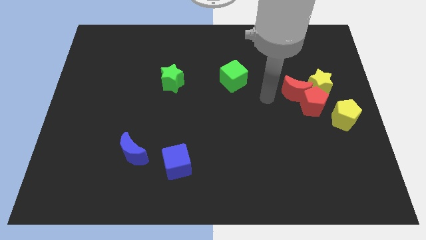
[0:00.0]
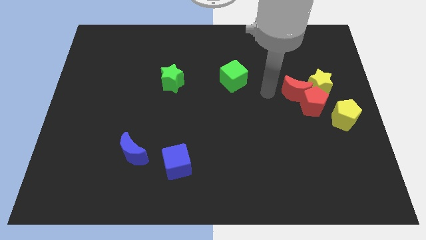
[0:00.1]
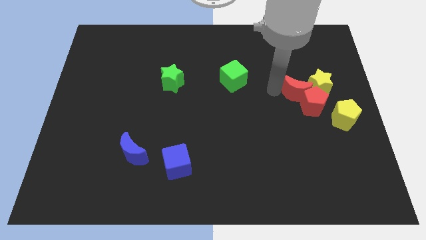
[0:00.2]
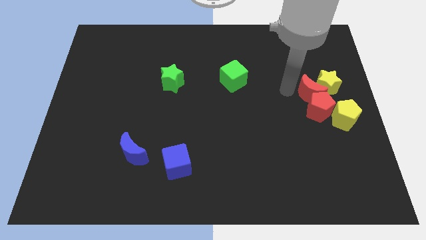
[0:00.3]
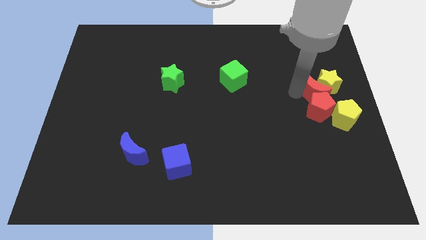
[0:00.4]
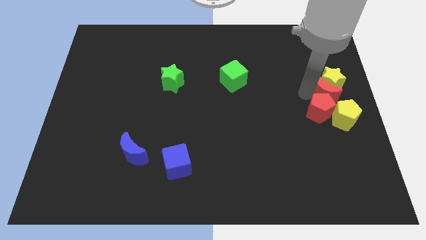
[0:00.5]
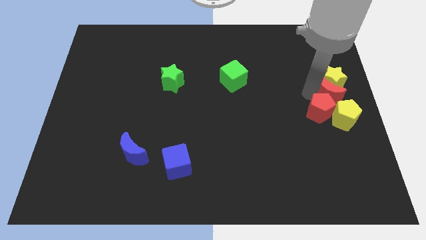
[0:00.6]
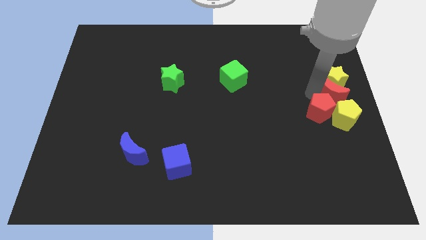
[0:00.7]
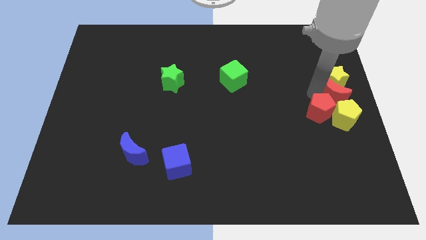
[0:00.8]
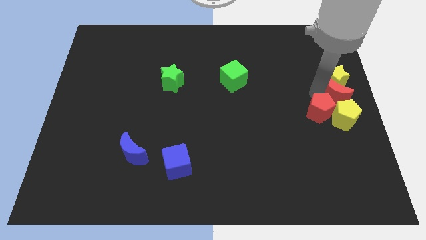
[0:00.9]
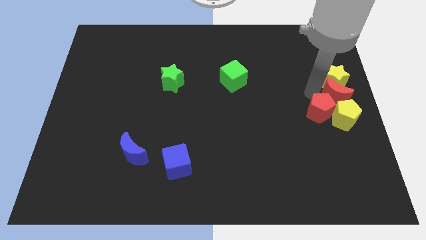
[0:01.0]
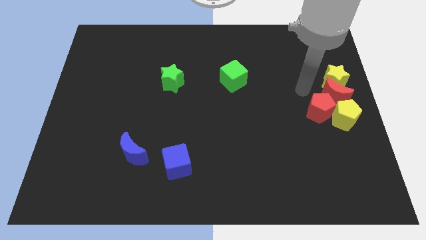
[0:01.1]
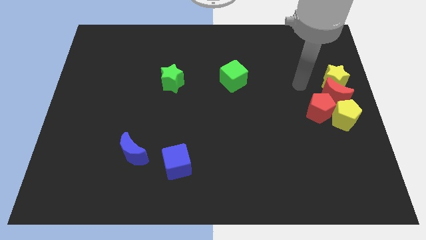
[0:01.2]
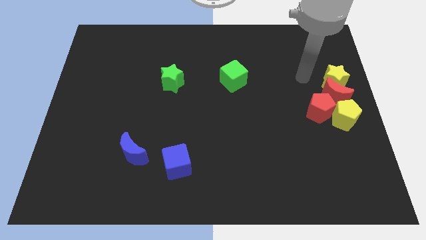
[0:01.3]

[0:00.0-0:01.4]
push red moon into the yellow blocks

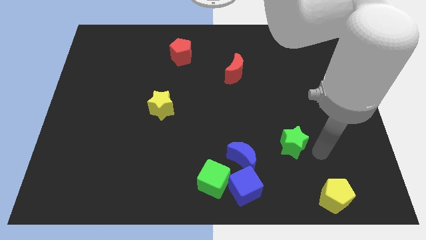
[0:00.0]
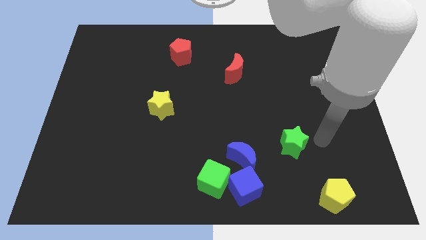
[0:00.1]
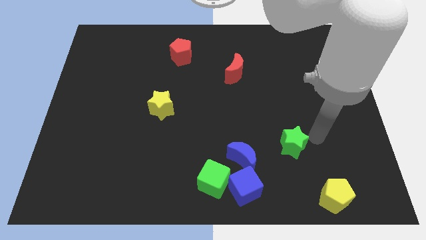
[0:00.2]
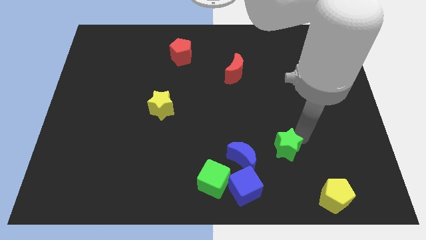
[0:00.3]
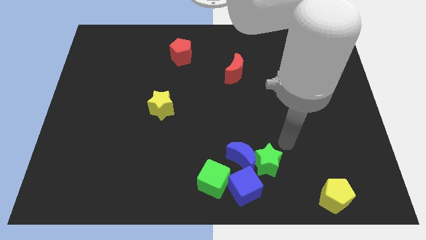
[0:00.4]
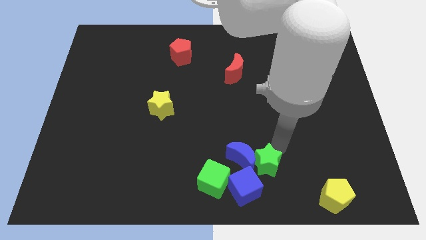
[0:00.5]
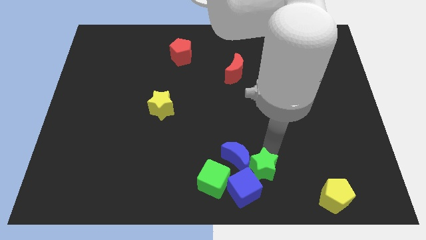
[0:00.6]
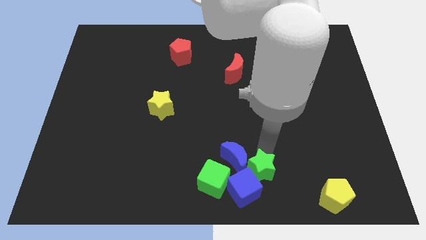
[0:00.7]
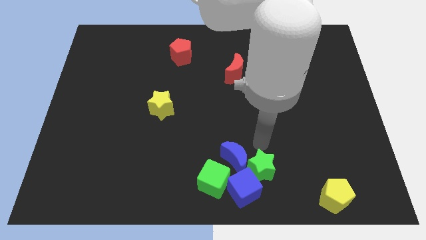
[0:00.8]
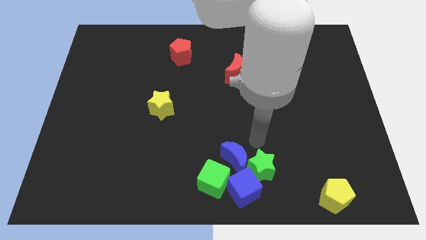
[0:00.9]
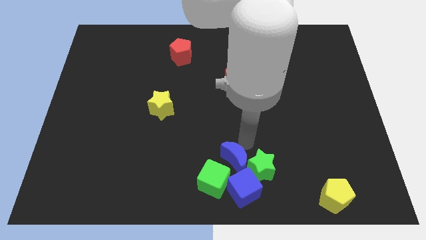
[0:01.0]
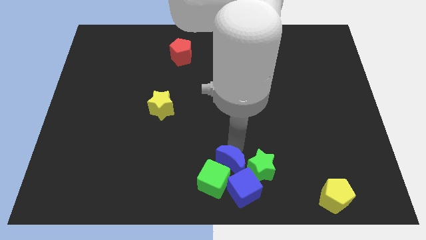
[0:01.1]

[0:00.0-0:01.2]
move the green star into blue blocks

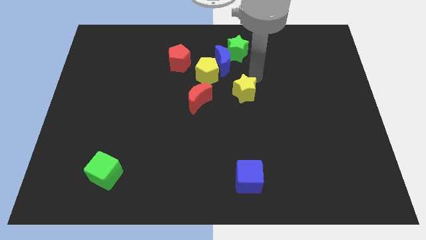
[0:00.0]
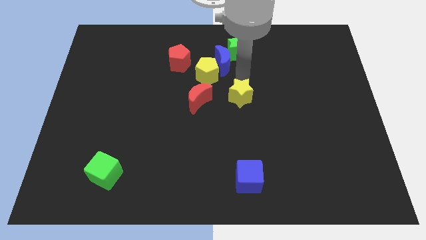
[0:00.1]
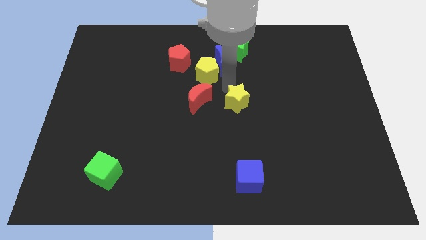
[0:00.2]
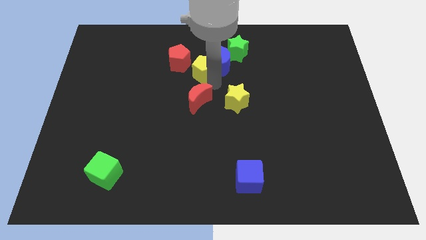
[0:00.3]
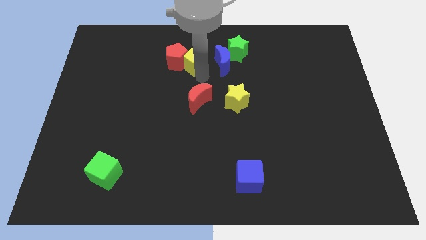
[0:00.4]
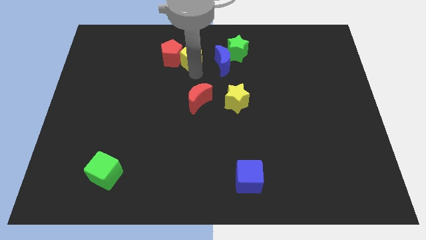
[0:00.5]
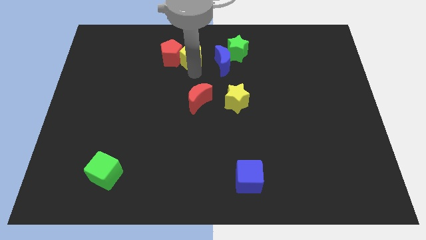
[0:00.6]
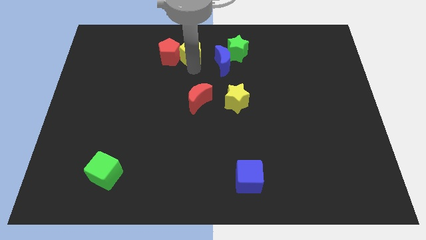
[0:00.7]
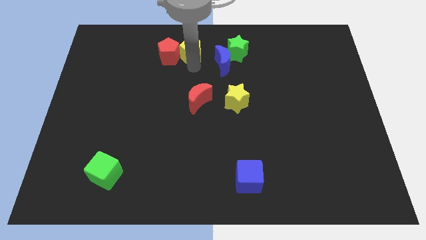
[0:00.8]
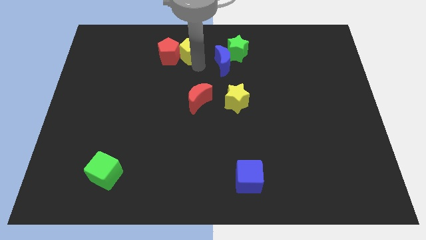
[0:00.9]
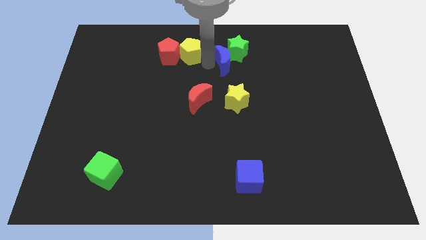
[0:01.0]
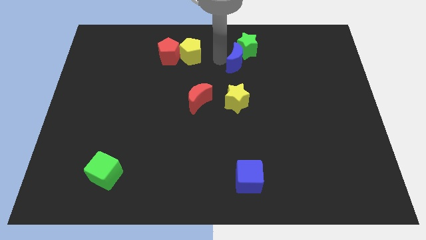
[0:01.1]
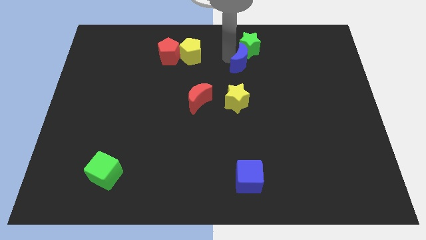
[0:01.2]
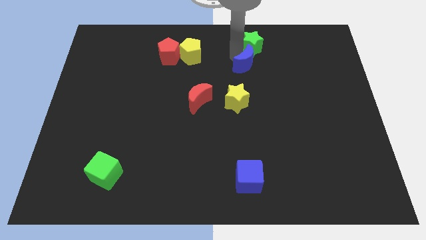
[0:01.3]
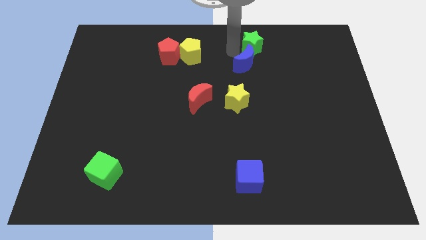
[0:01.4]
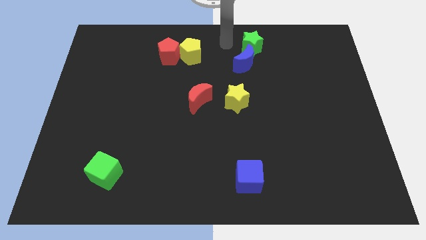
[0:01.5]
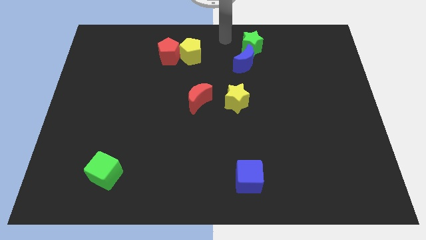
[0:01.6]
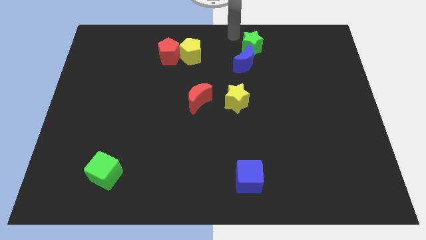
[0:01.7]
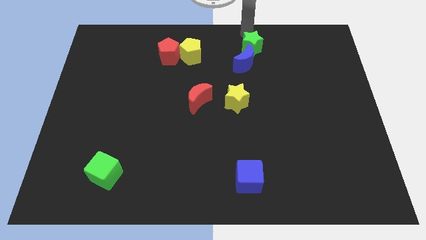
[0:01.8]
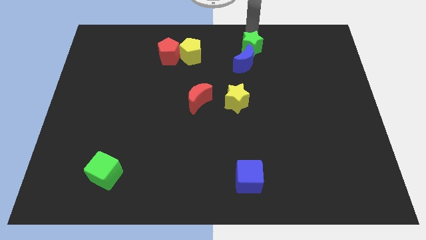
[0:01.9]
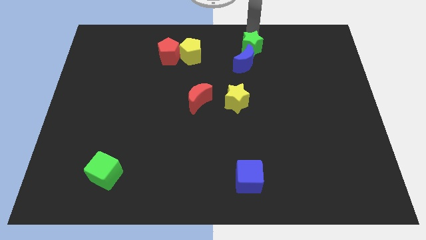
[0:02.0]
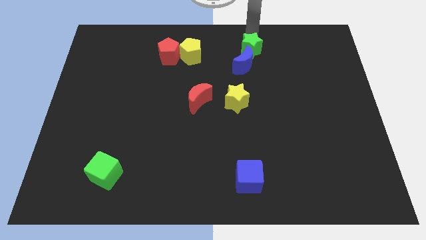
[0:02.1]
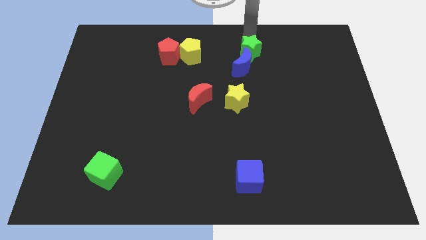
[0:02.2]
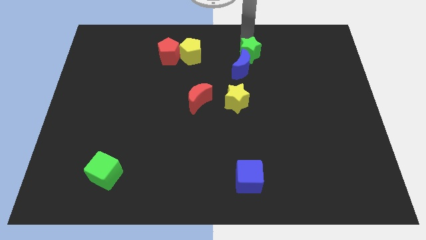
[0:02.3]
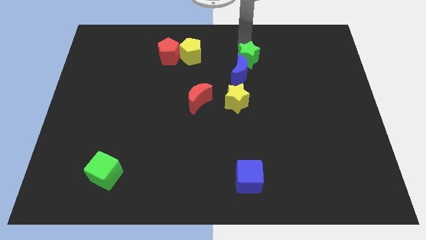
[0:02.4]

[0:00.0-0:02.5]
go and separate the yellow pentagon blue moon and green star

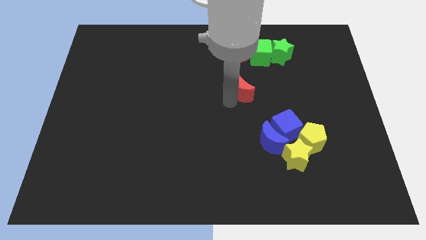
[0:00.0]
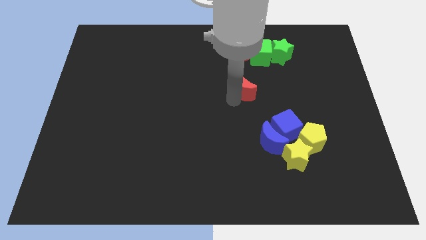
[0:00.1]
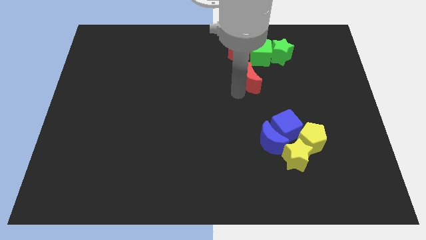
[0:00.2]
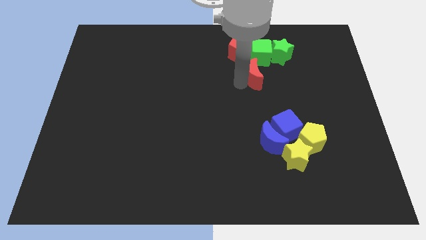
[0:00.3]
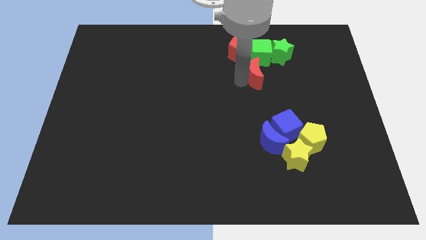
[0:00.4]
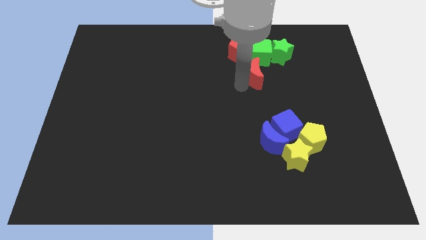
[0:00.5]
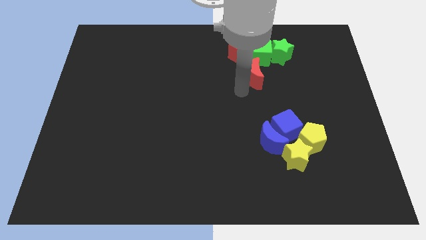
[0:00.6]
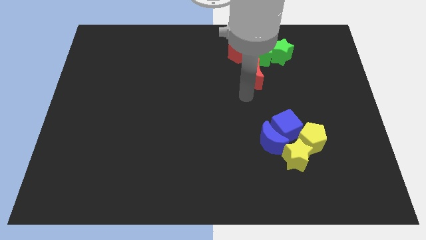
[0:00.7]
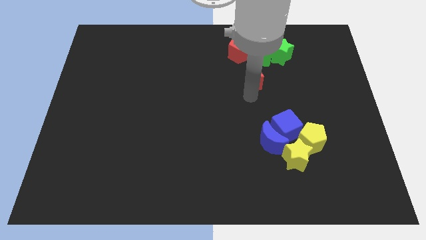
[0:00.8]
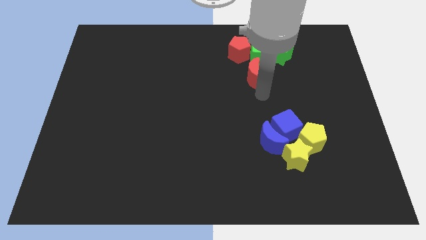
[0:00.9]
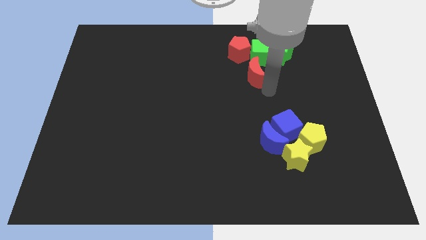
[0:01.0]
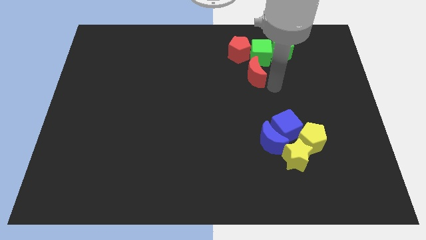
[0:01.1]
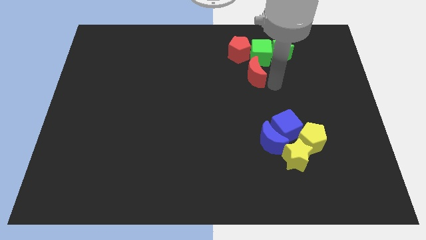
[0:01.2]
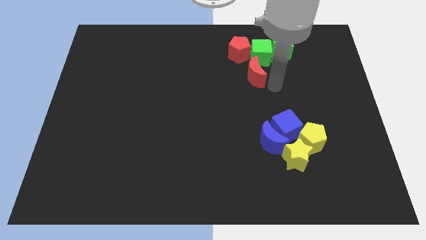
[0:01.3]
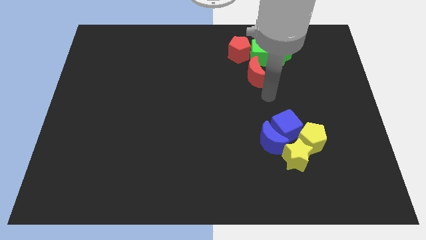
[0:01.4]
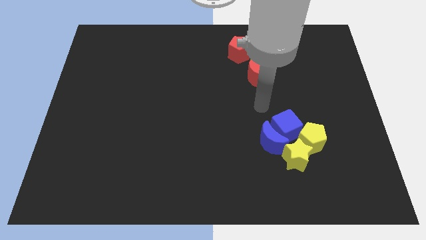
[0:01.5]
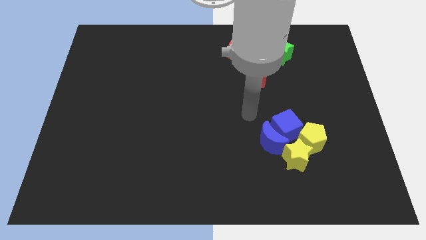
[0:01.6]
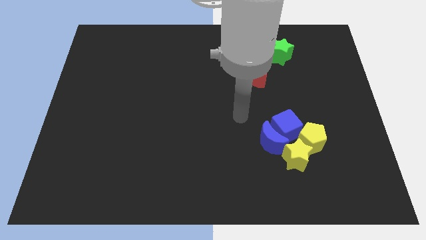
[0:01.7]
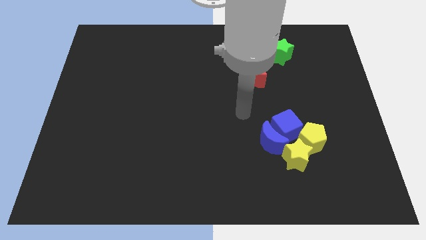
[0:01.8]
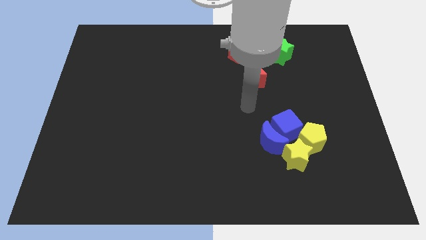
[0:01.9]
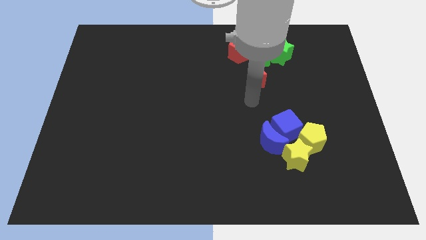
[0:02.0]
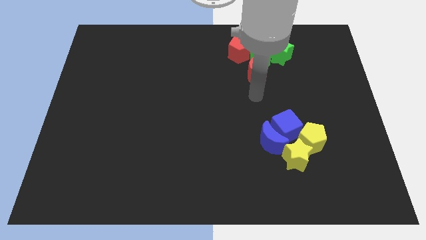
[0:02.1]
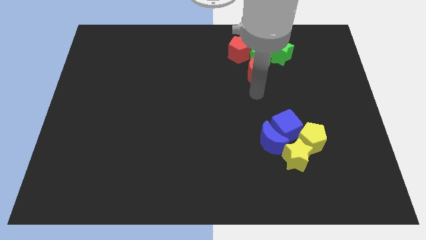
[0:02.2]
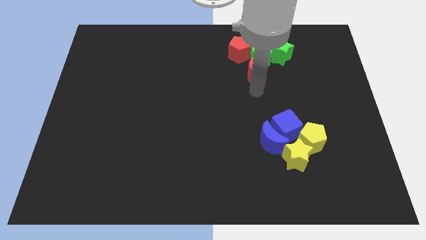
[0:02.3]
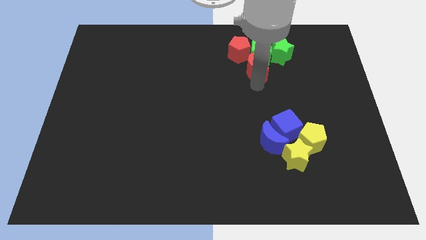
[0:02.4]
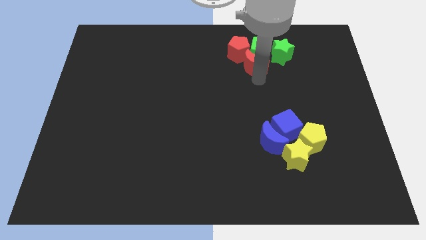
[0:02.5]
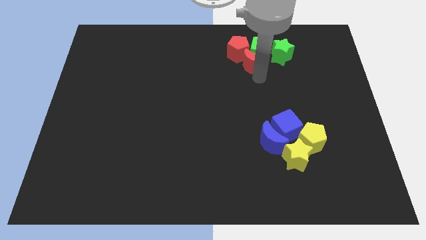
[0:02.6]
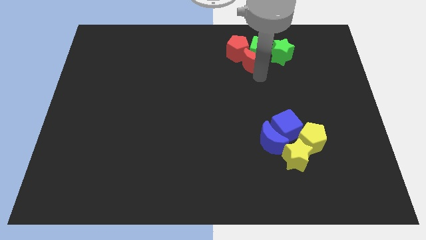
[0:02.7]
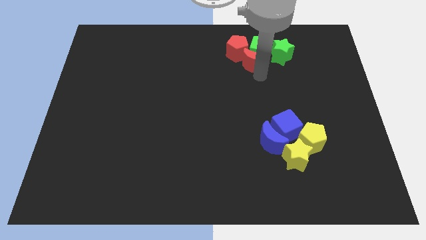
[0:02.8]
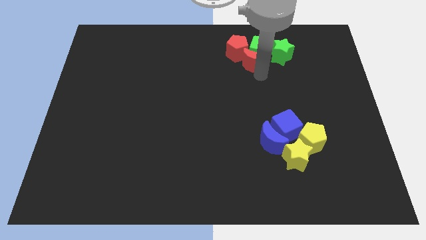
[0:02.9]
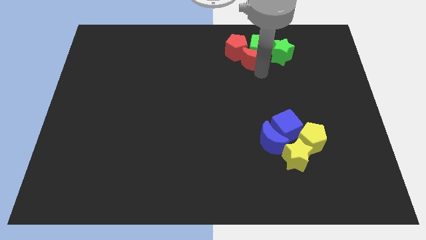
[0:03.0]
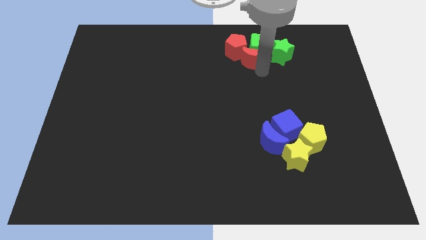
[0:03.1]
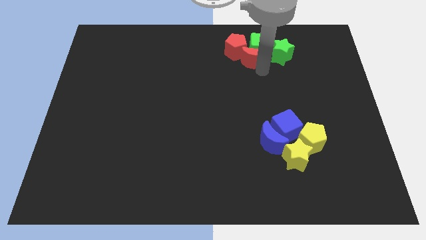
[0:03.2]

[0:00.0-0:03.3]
push the red moon into the green cube

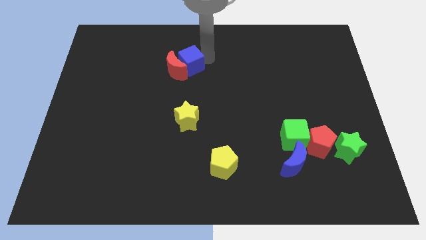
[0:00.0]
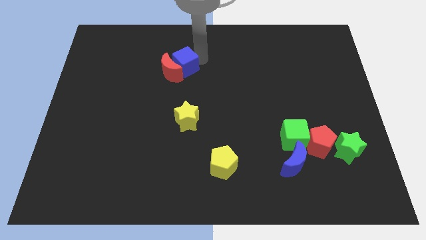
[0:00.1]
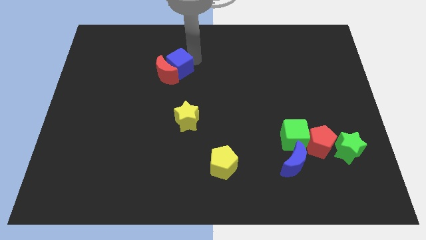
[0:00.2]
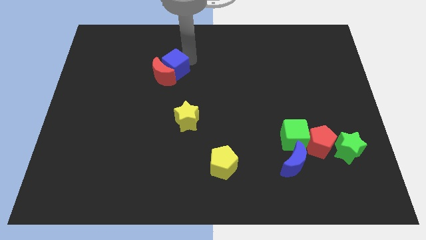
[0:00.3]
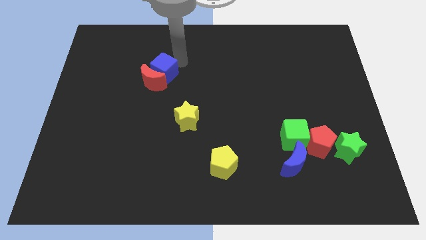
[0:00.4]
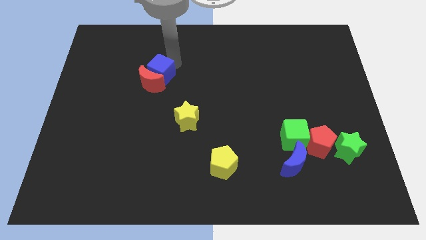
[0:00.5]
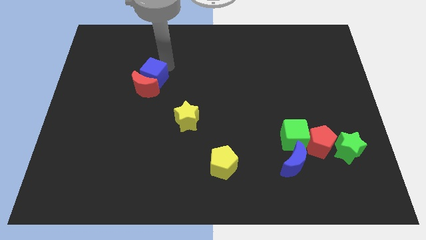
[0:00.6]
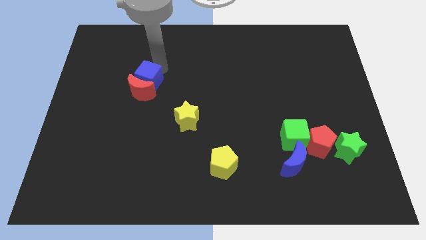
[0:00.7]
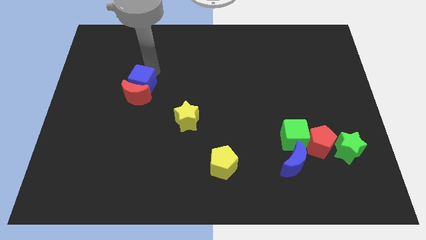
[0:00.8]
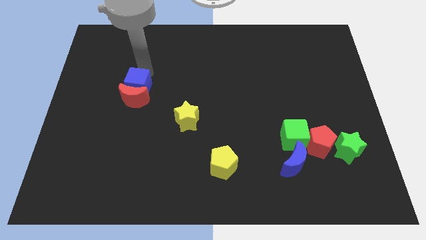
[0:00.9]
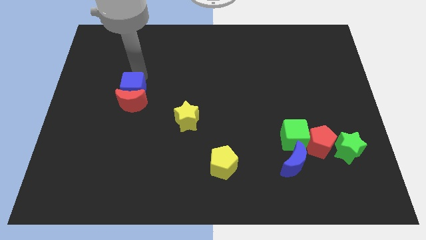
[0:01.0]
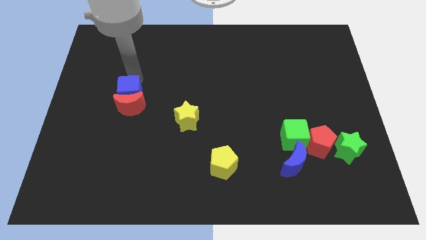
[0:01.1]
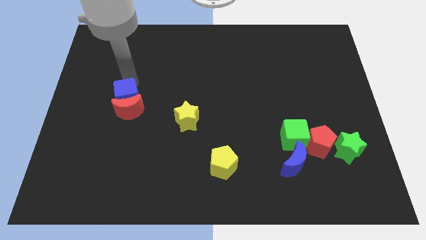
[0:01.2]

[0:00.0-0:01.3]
push the red moon and blue cube to the top left side of the yellow star
